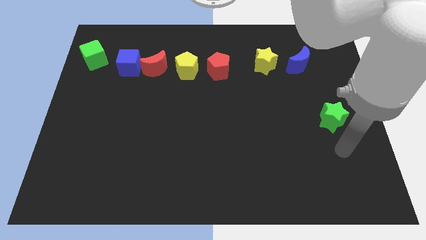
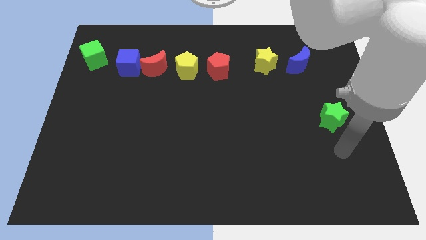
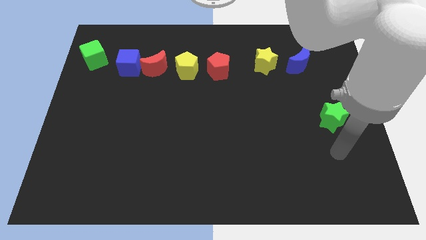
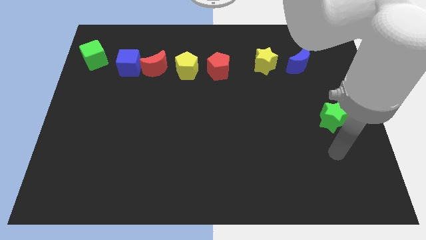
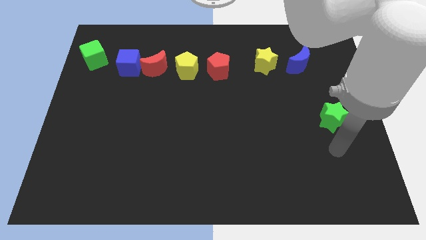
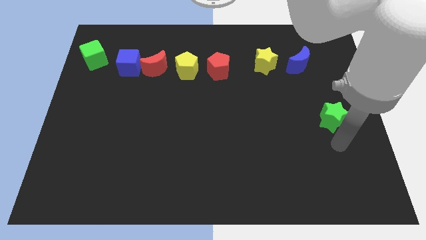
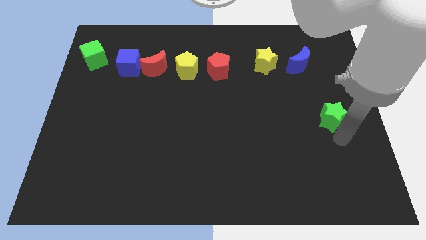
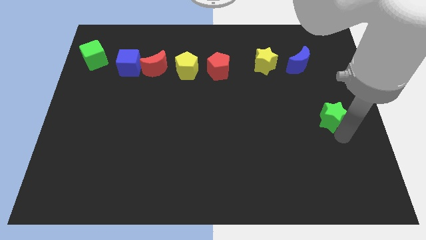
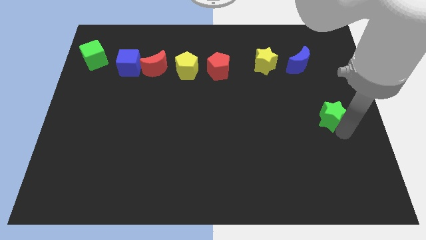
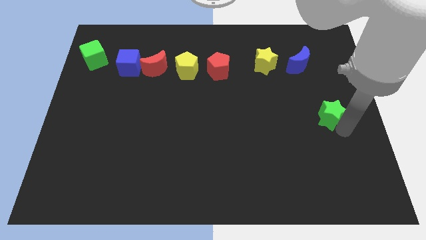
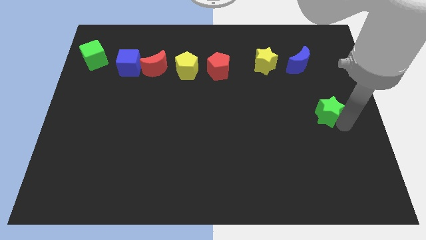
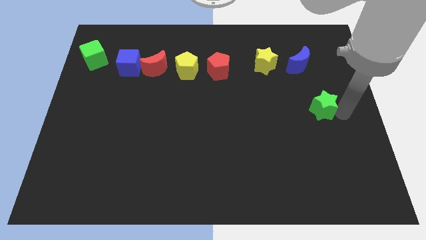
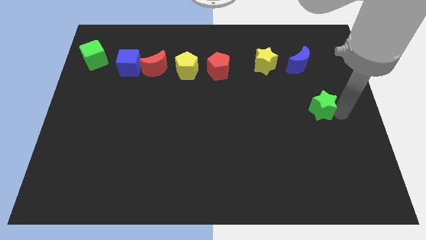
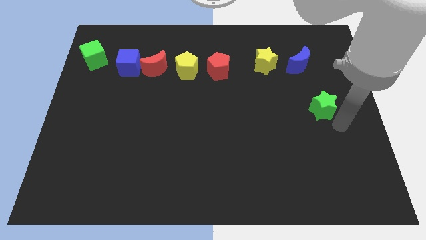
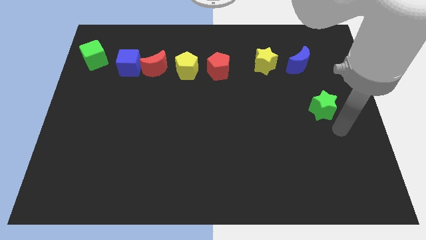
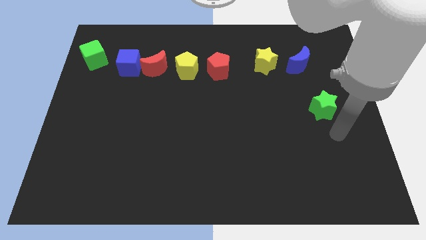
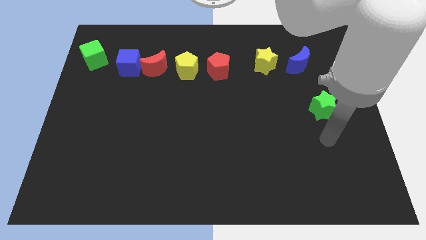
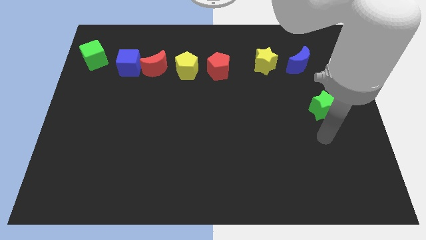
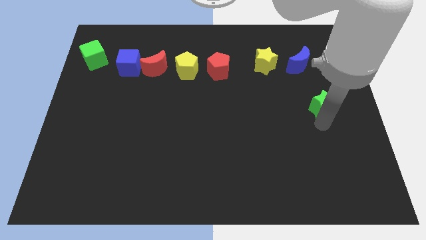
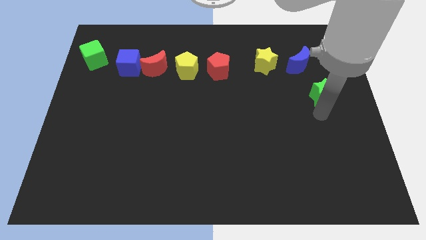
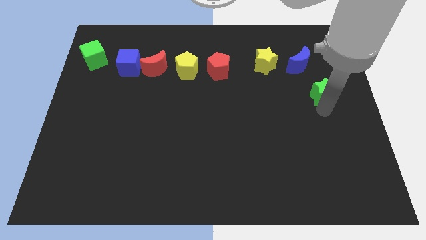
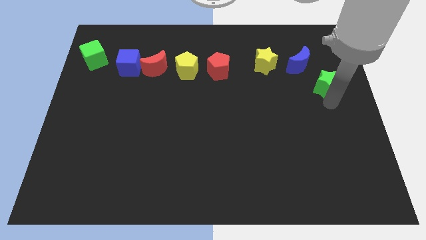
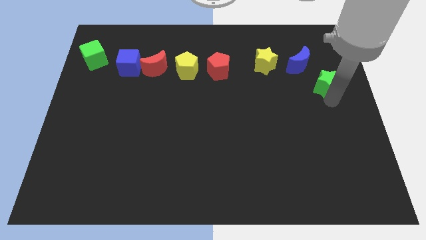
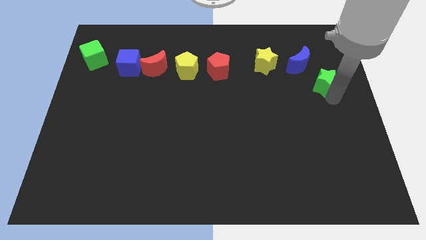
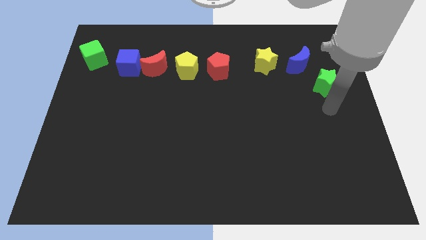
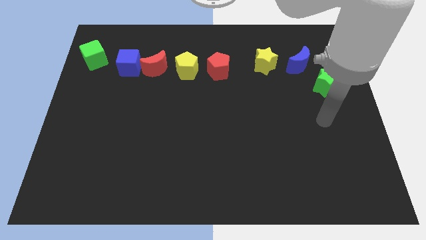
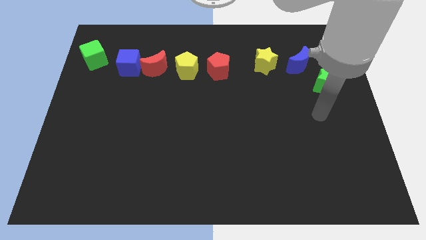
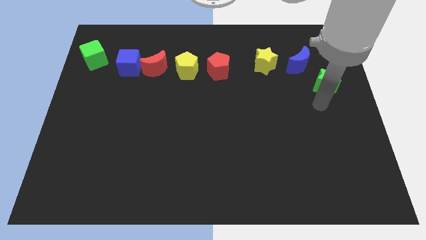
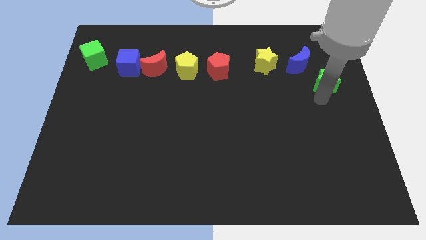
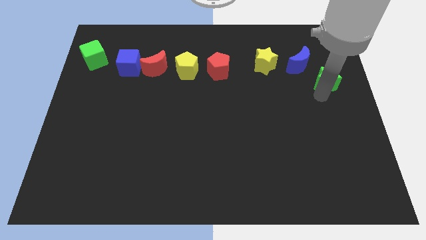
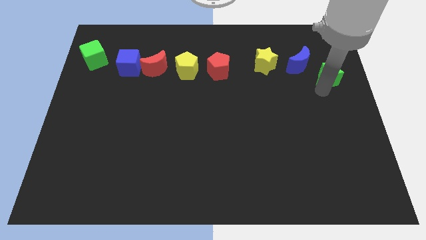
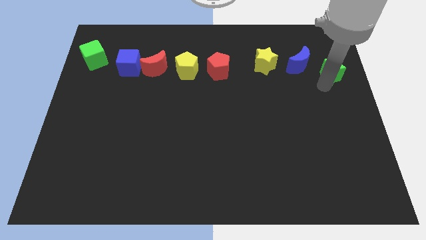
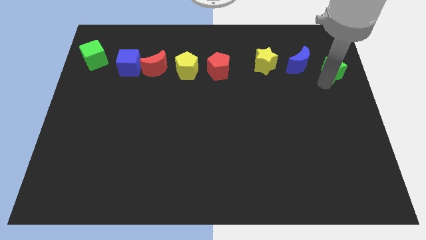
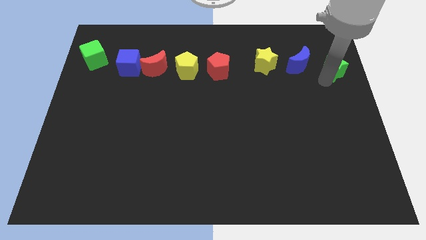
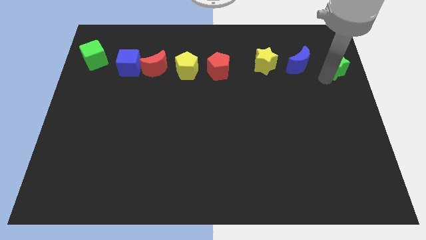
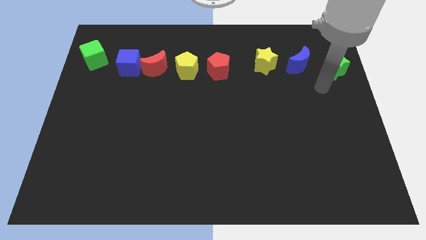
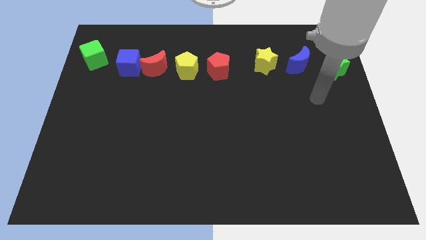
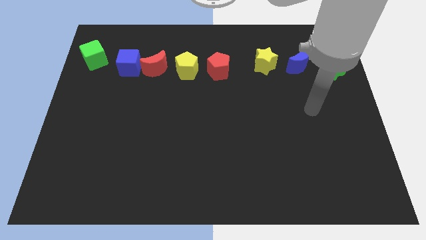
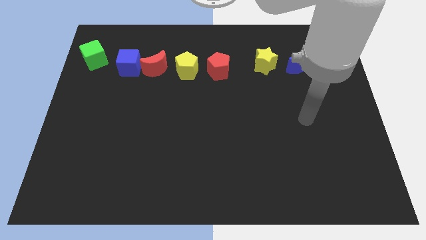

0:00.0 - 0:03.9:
place green star to the right of blue moon

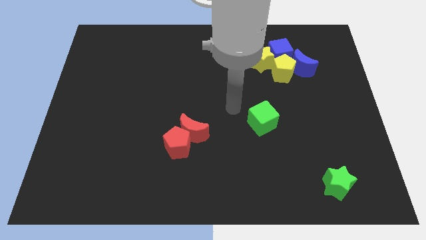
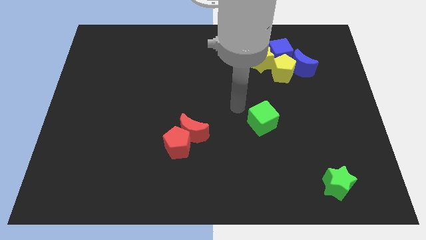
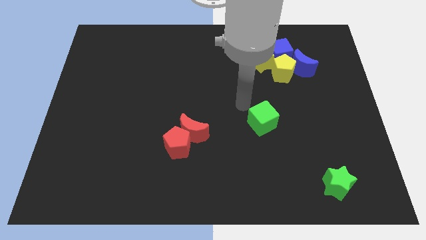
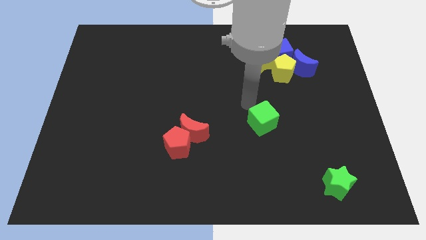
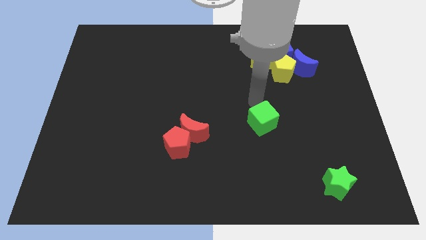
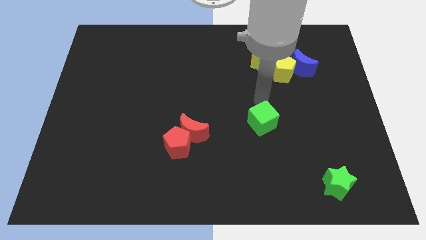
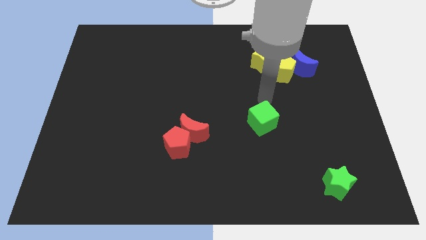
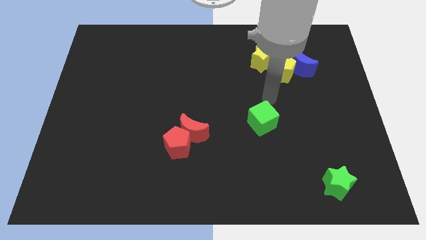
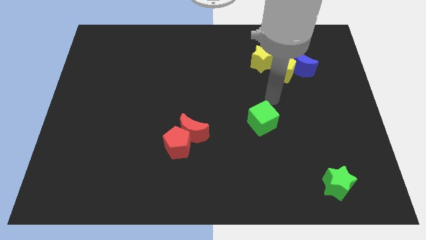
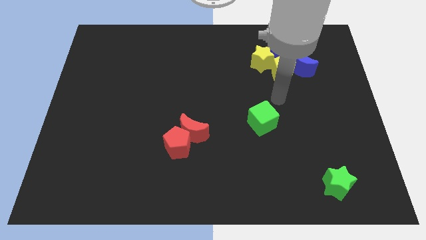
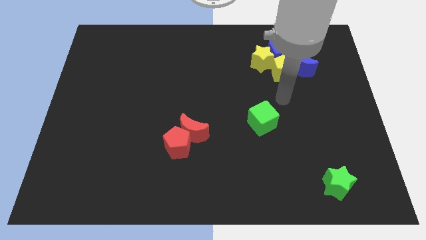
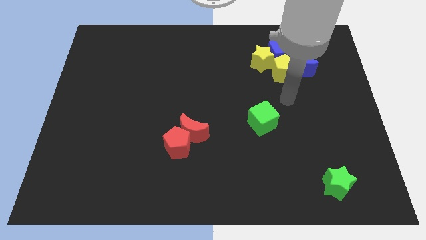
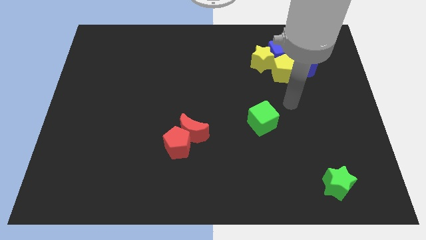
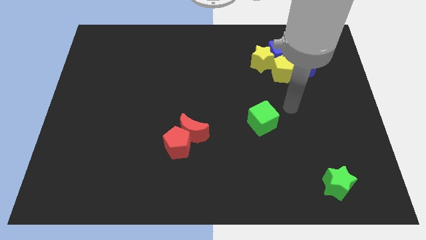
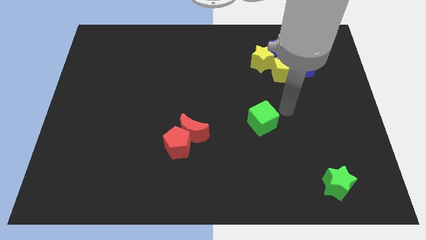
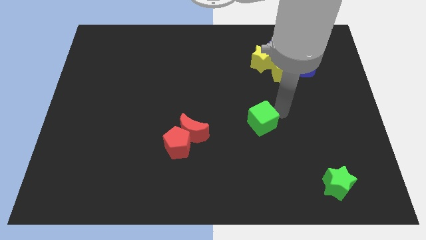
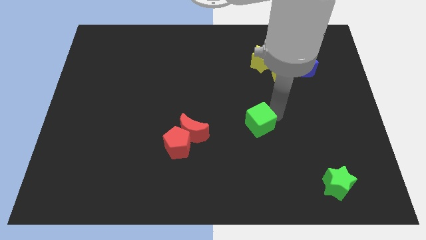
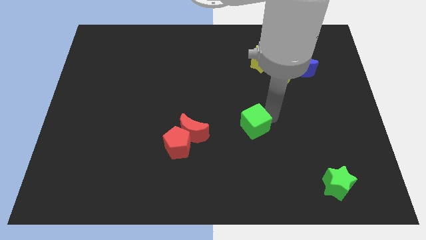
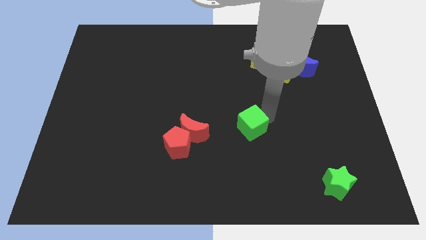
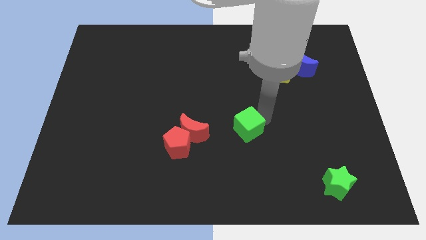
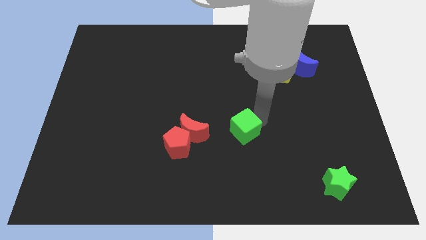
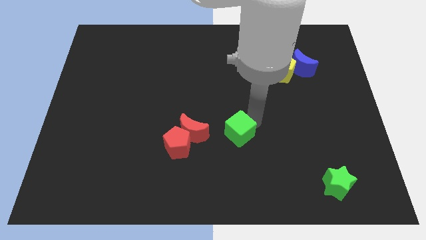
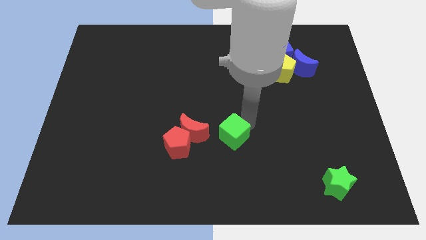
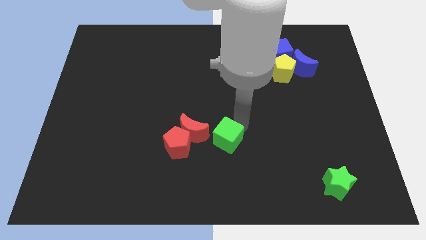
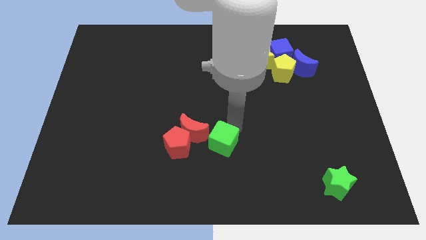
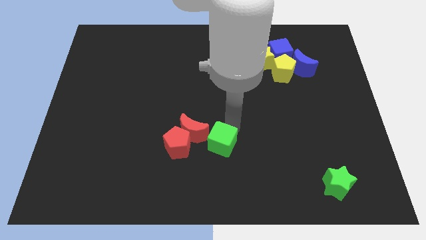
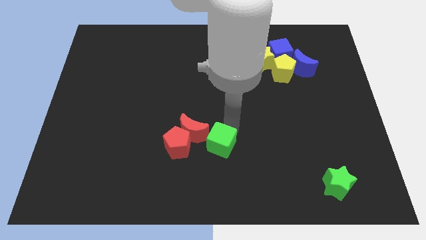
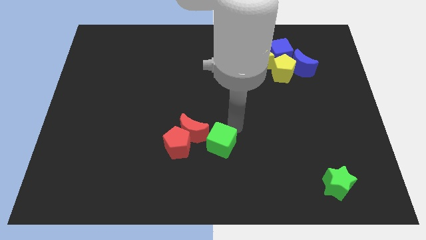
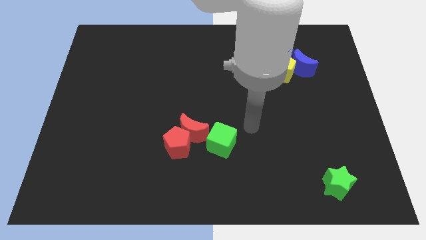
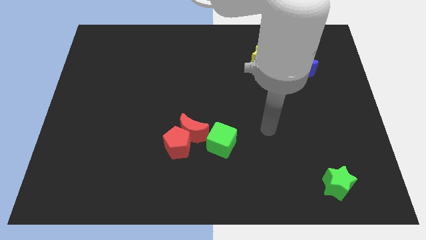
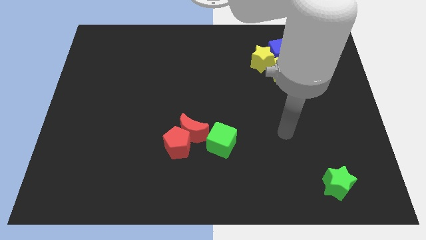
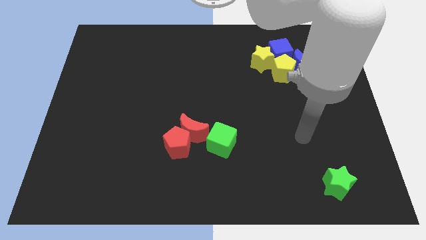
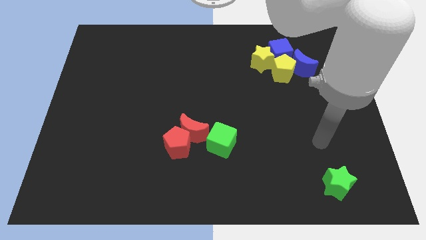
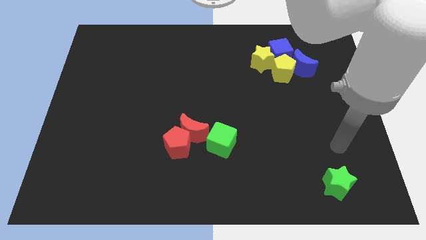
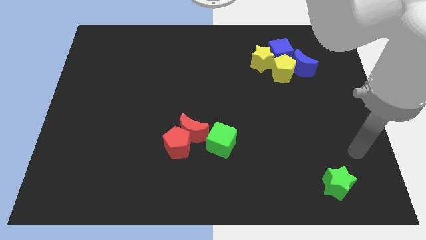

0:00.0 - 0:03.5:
put the green cube parallel right to the red pentagon

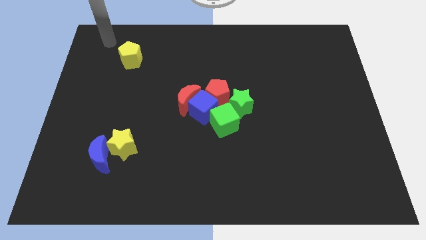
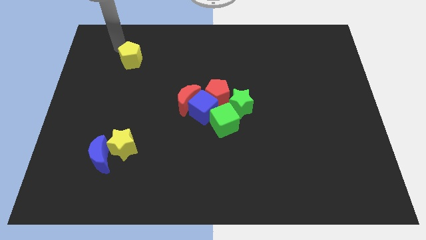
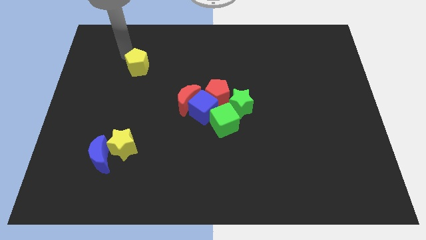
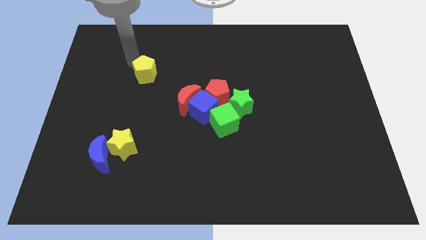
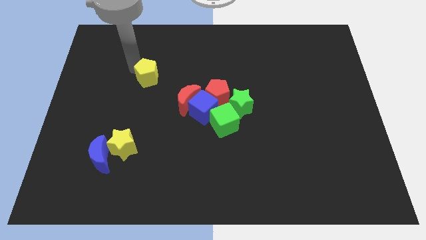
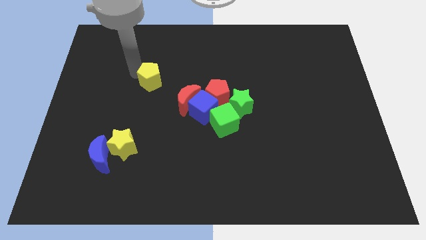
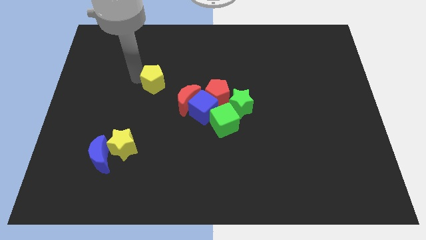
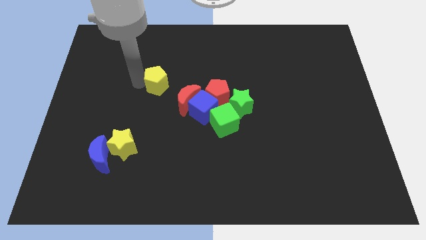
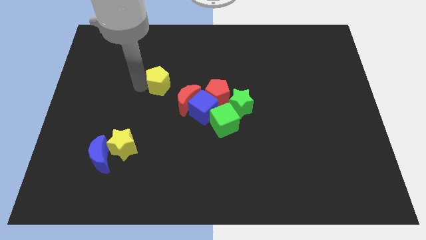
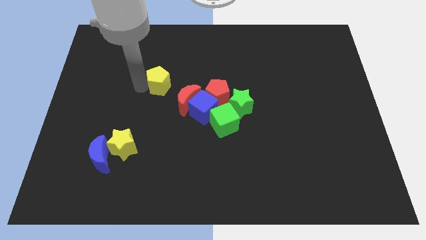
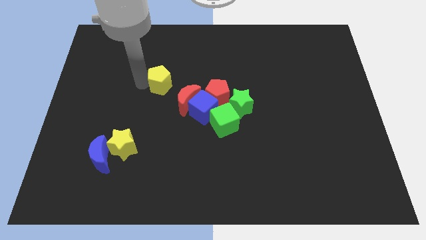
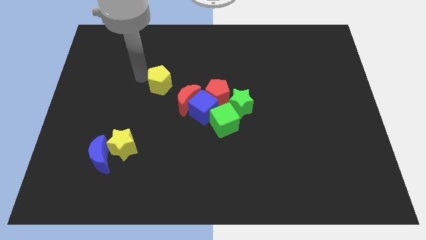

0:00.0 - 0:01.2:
push the yellow pentagon towards the red moon

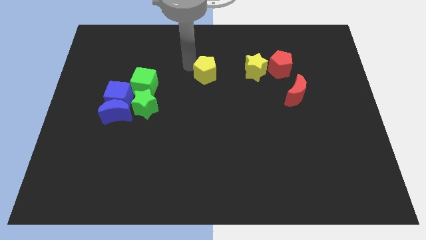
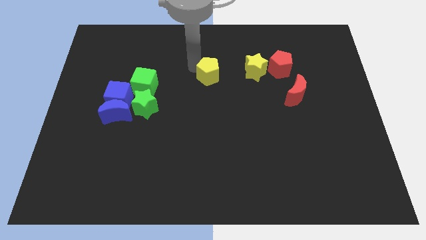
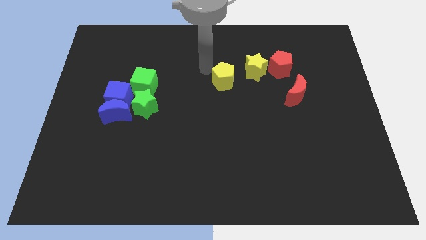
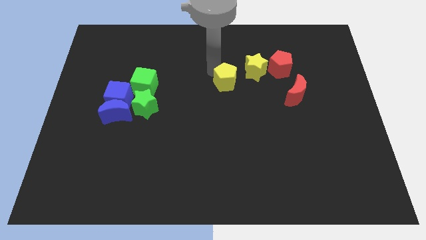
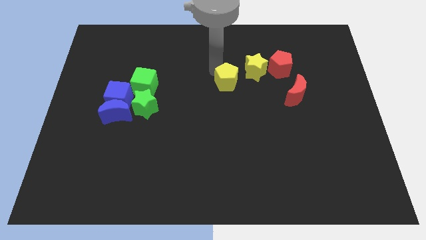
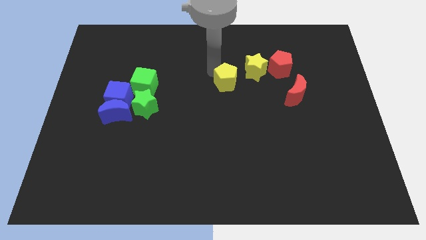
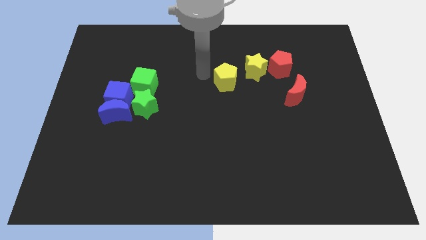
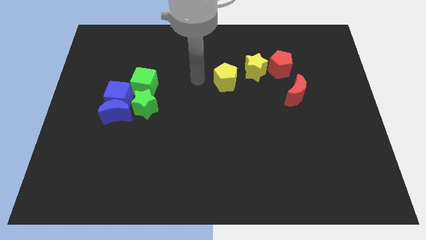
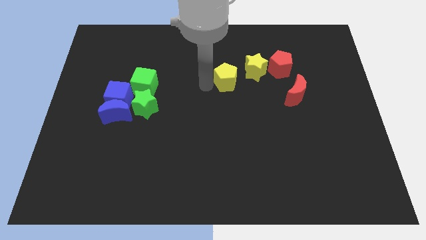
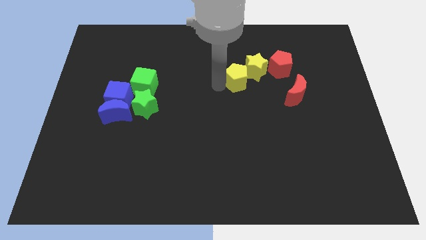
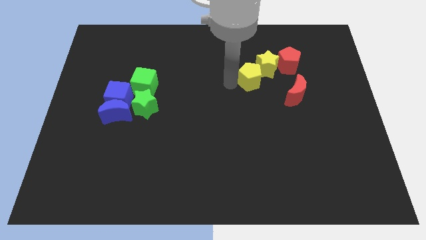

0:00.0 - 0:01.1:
move the yellow star left below the yellow star
